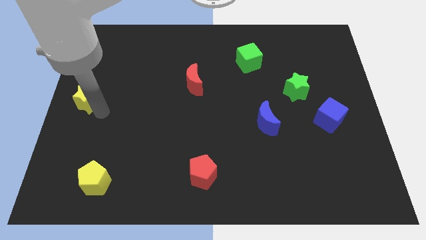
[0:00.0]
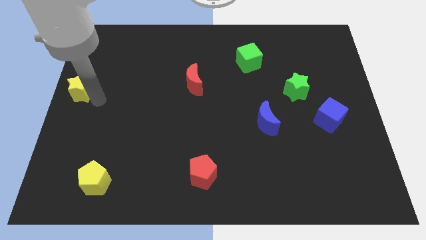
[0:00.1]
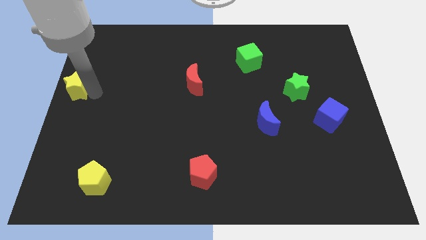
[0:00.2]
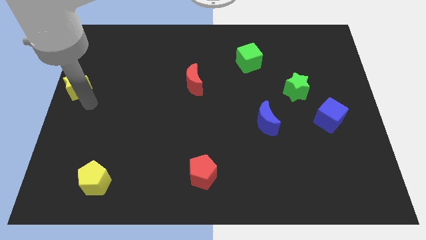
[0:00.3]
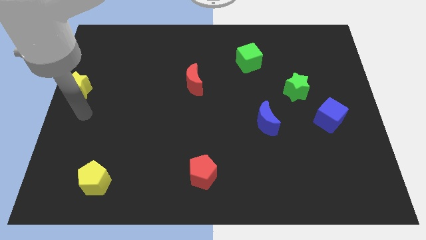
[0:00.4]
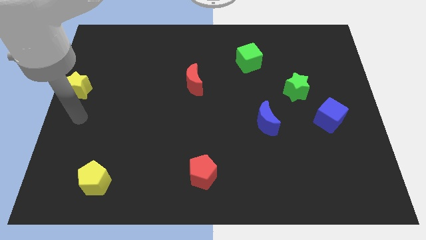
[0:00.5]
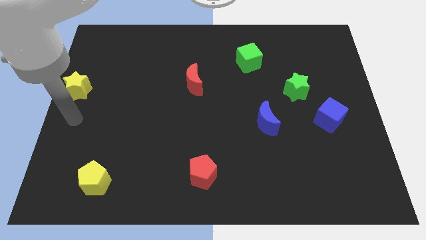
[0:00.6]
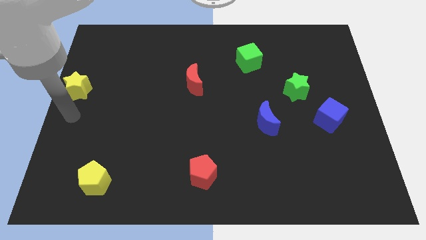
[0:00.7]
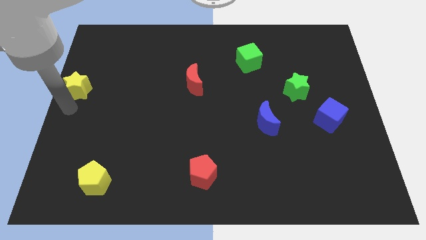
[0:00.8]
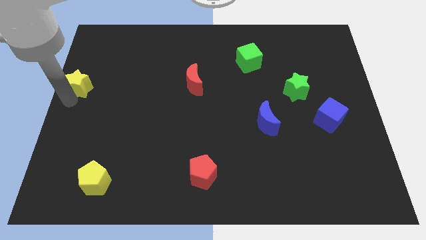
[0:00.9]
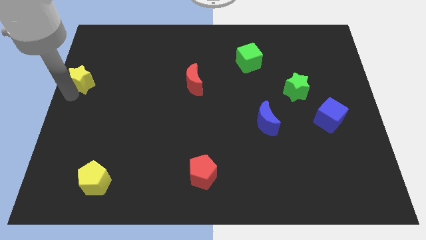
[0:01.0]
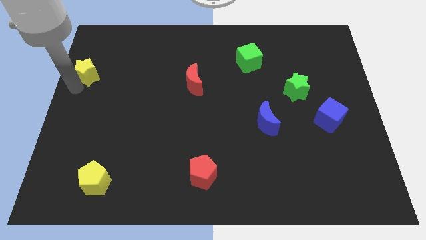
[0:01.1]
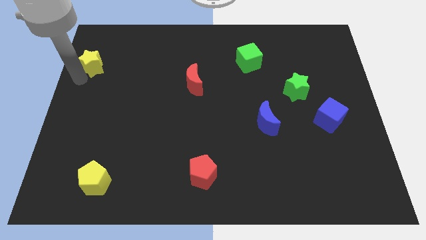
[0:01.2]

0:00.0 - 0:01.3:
move yellow star towards top of the board

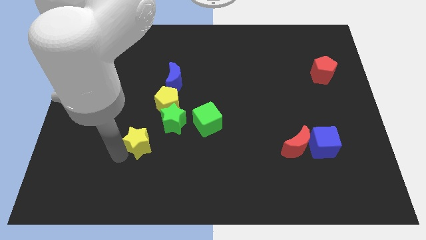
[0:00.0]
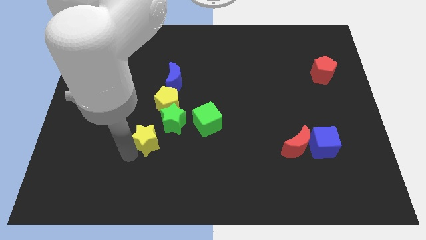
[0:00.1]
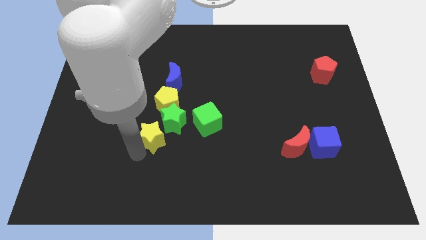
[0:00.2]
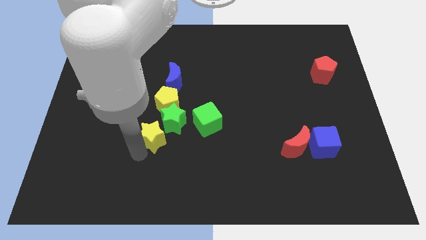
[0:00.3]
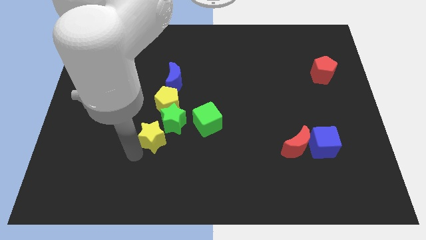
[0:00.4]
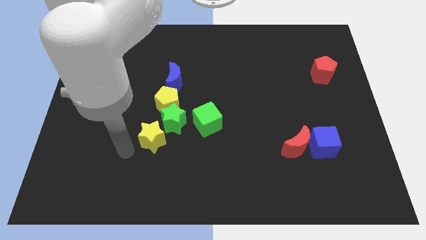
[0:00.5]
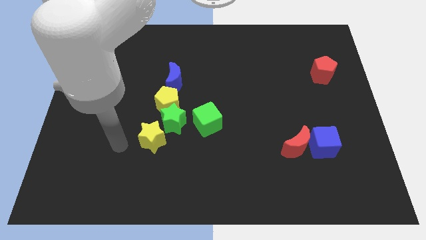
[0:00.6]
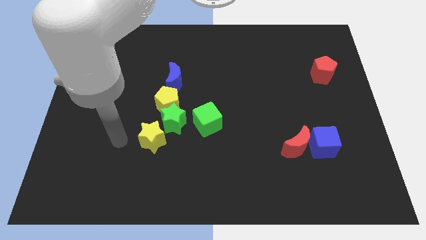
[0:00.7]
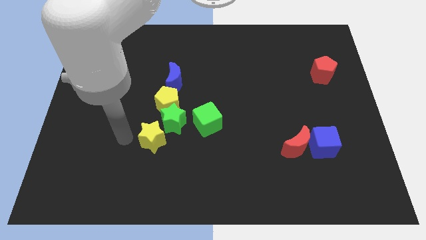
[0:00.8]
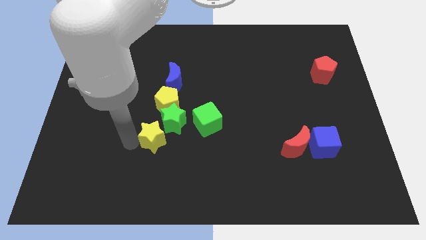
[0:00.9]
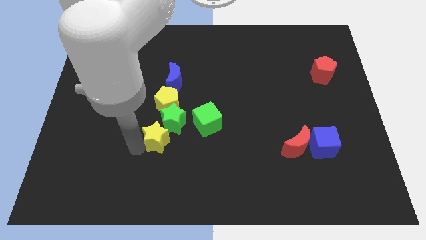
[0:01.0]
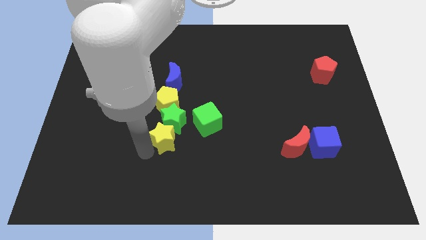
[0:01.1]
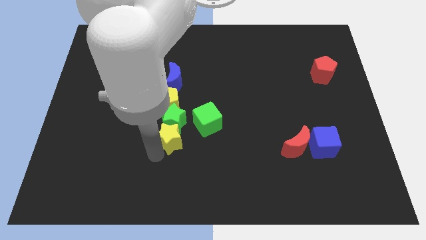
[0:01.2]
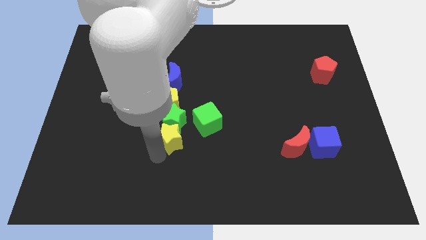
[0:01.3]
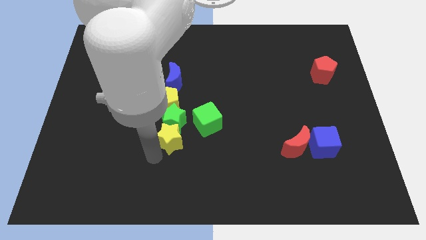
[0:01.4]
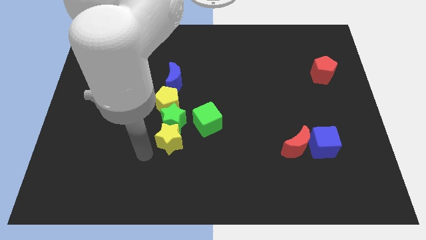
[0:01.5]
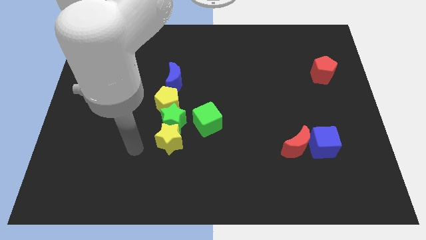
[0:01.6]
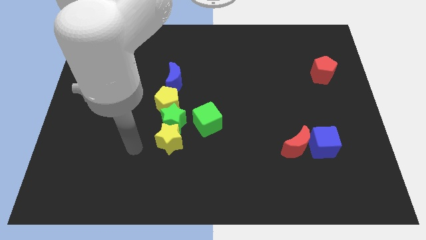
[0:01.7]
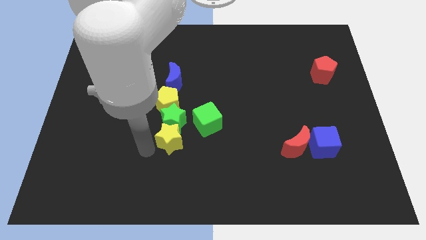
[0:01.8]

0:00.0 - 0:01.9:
move the yellow star below to the green star

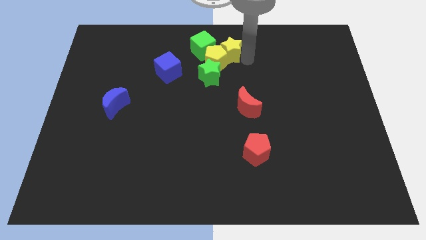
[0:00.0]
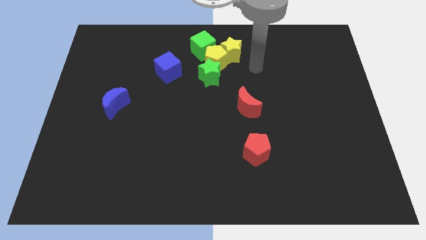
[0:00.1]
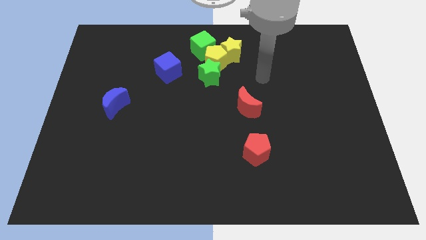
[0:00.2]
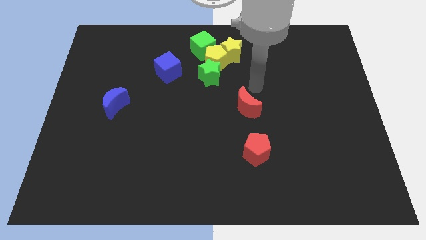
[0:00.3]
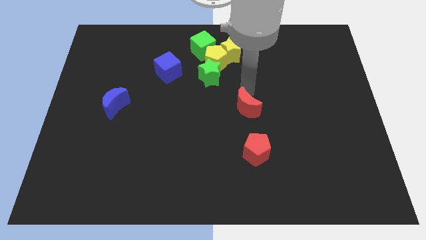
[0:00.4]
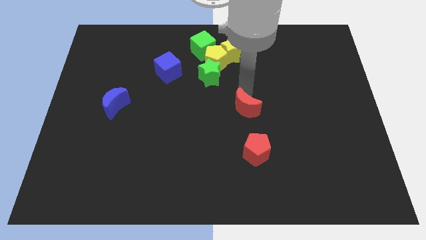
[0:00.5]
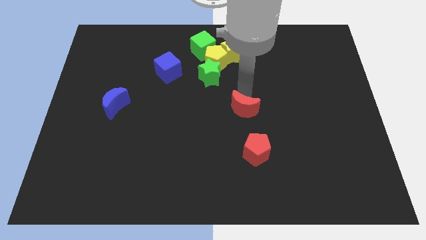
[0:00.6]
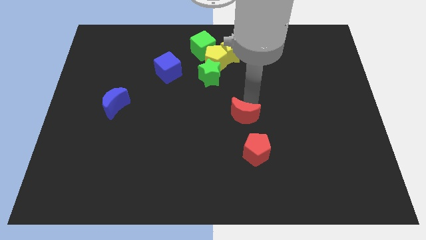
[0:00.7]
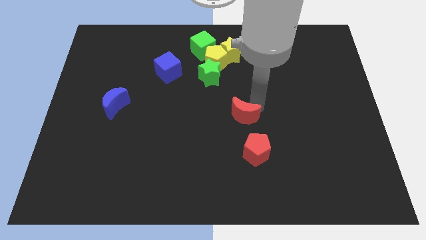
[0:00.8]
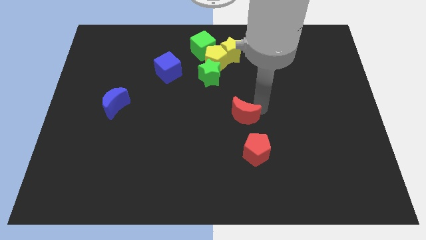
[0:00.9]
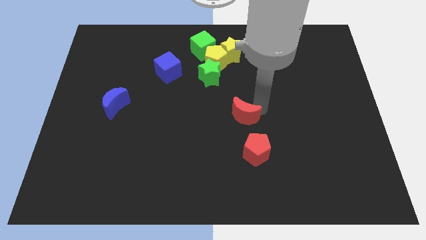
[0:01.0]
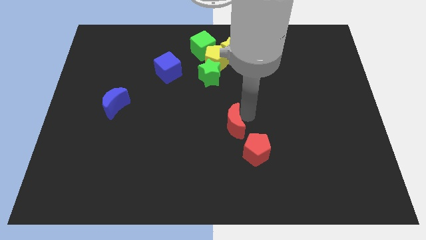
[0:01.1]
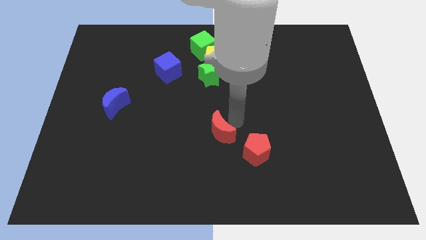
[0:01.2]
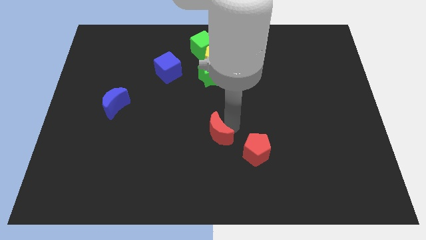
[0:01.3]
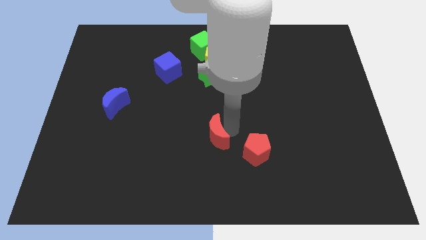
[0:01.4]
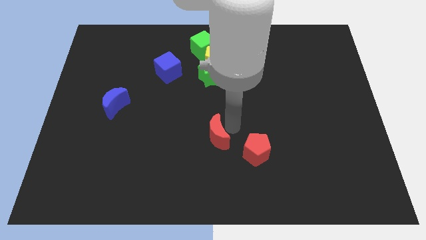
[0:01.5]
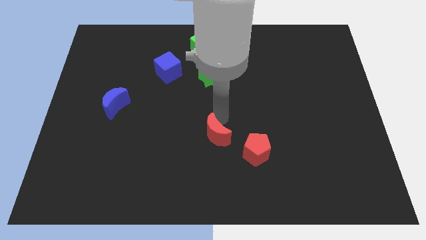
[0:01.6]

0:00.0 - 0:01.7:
slide the red moon diagonal to red pentagon

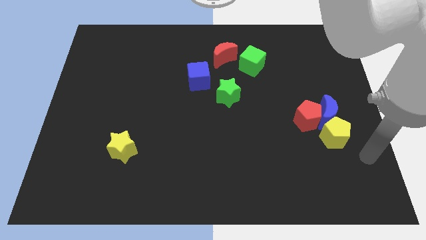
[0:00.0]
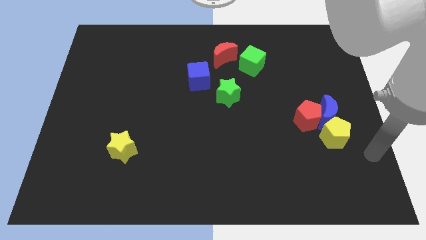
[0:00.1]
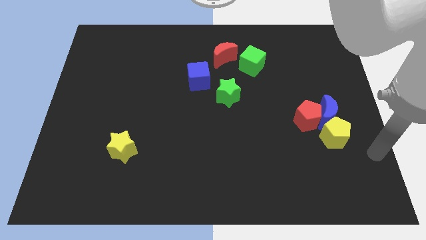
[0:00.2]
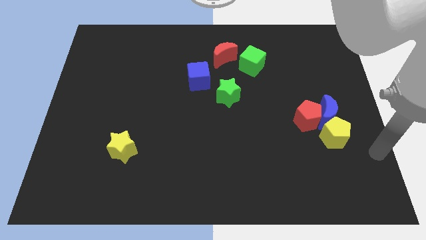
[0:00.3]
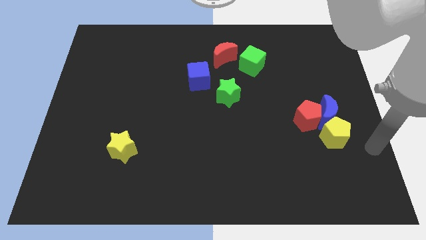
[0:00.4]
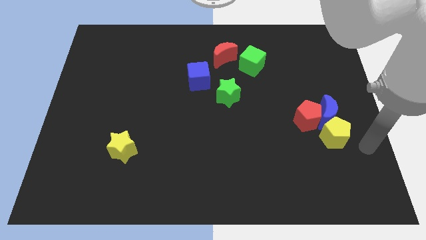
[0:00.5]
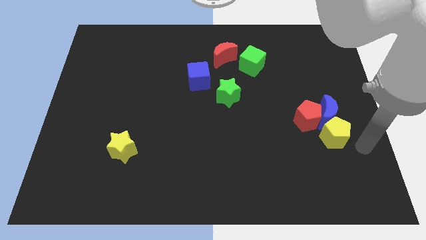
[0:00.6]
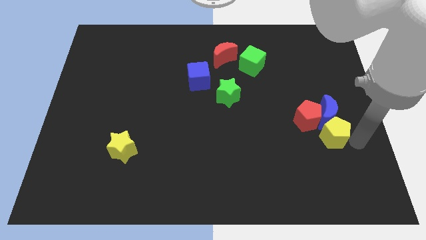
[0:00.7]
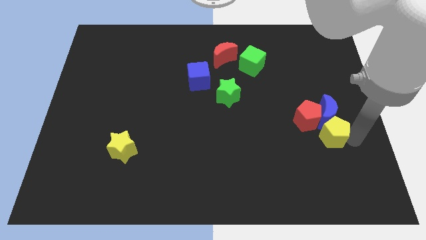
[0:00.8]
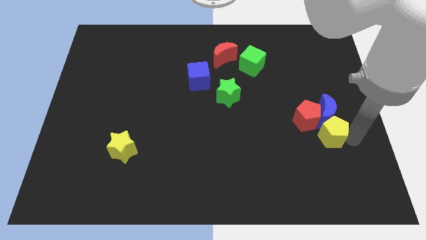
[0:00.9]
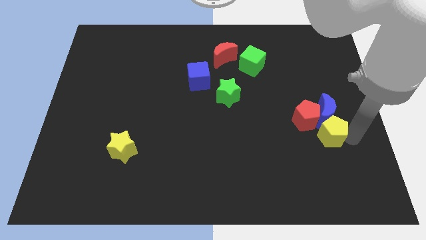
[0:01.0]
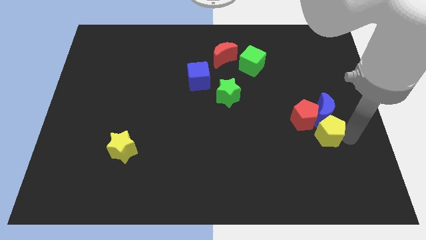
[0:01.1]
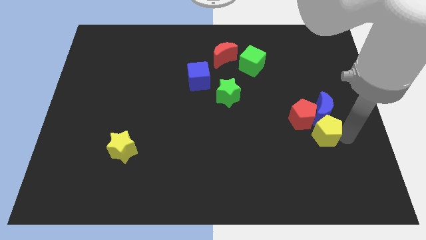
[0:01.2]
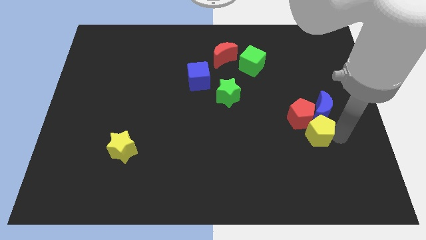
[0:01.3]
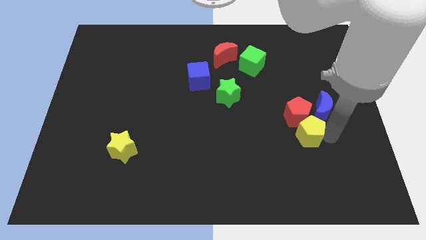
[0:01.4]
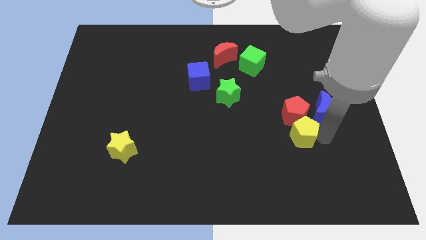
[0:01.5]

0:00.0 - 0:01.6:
move the yellow pentagon into the red pentagon

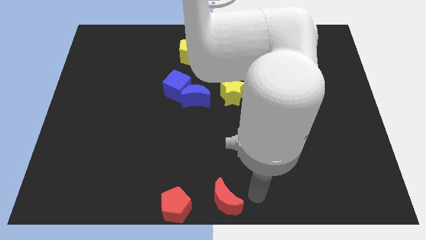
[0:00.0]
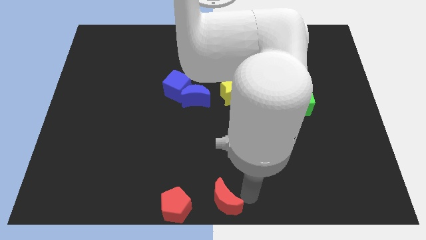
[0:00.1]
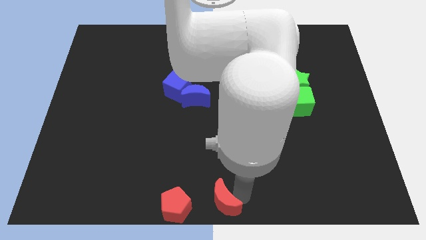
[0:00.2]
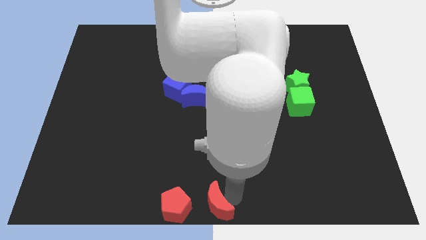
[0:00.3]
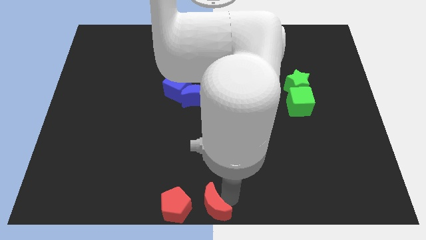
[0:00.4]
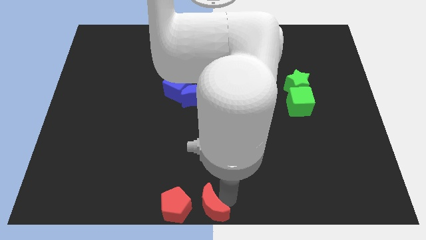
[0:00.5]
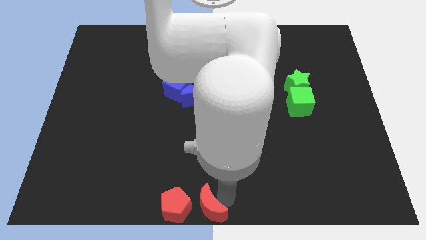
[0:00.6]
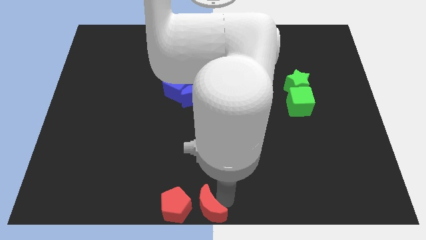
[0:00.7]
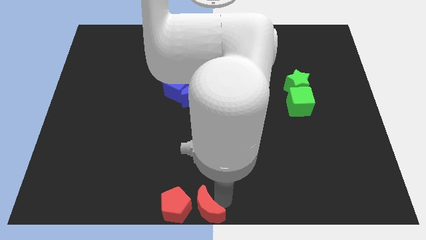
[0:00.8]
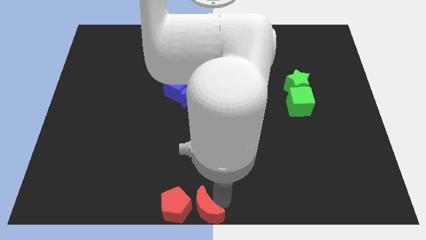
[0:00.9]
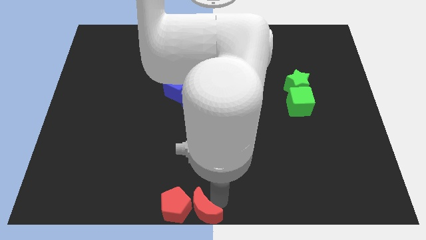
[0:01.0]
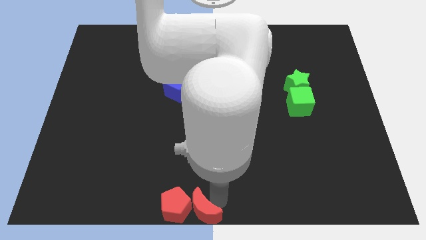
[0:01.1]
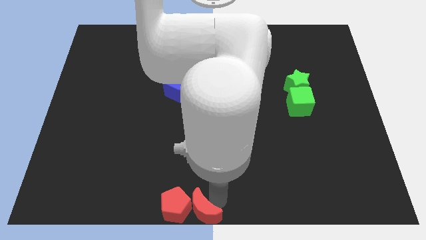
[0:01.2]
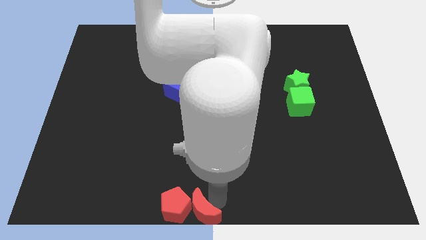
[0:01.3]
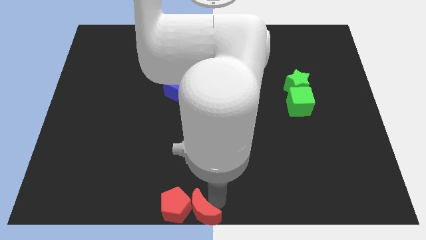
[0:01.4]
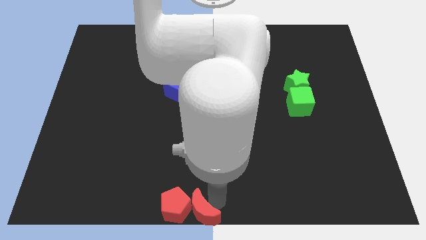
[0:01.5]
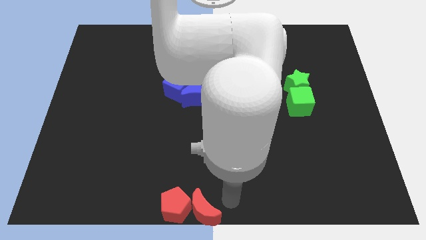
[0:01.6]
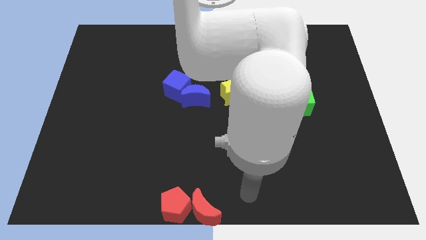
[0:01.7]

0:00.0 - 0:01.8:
make the red crescent touch the right side of the red pentagon

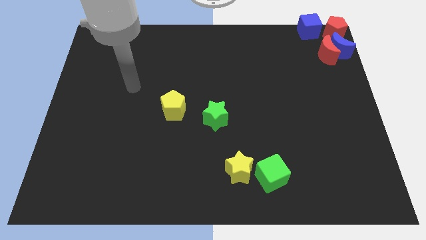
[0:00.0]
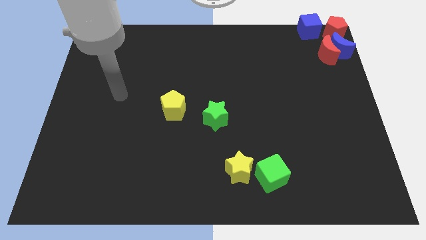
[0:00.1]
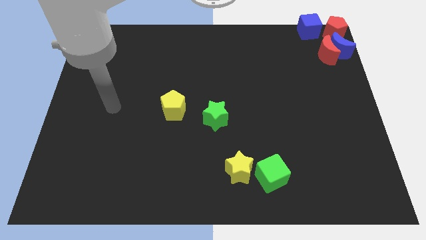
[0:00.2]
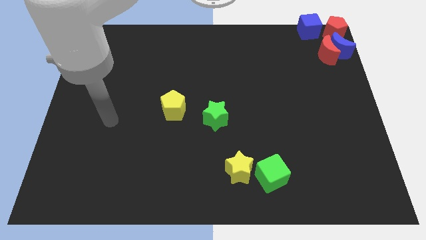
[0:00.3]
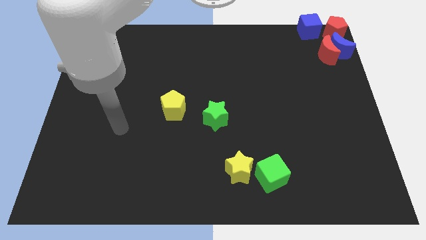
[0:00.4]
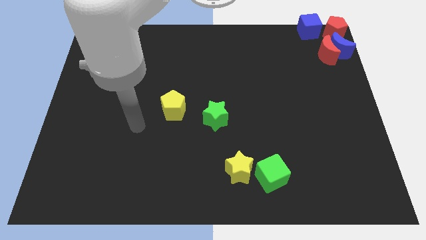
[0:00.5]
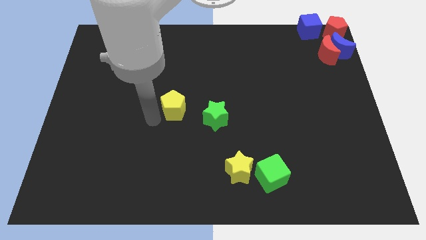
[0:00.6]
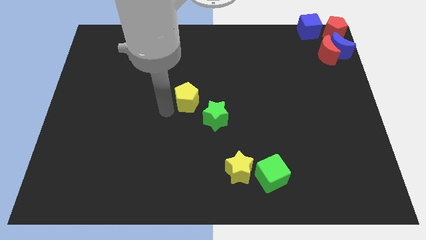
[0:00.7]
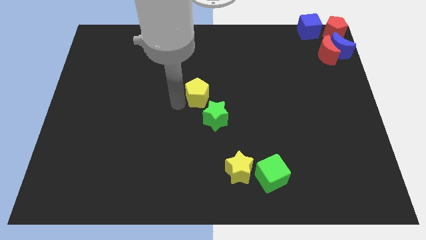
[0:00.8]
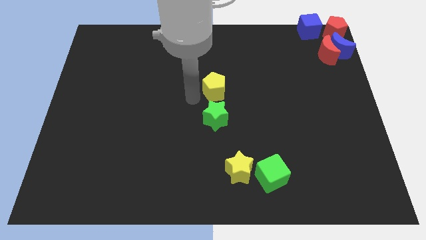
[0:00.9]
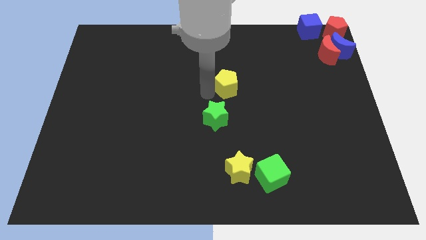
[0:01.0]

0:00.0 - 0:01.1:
move the yellow pentagon to the centre of the board
